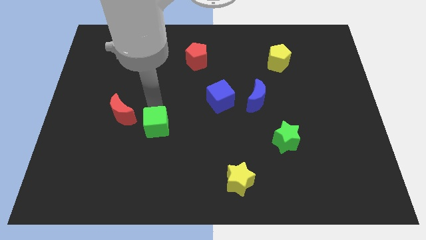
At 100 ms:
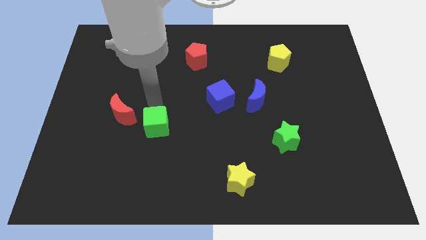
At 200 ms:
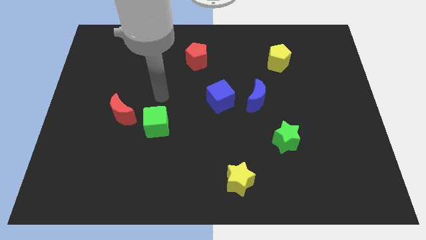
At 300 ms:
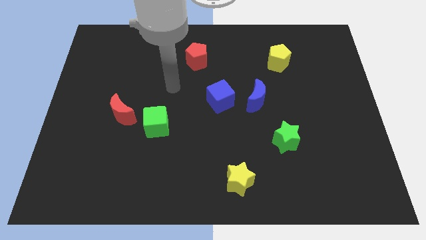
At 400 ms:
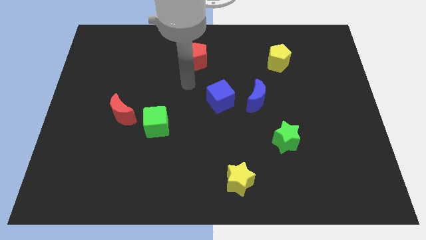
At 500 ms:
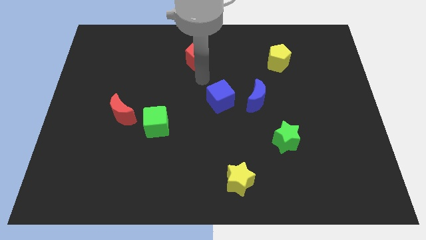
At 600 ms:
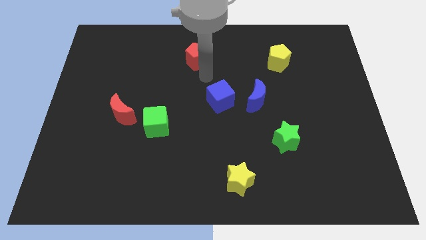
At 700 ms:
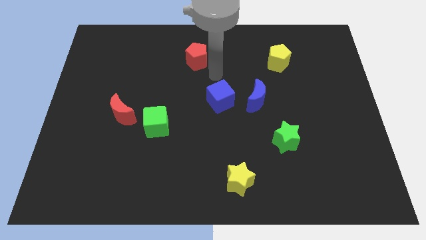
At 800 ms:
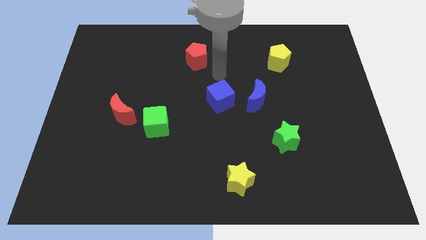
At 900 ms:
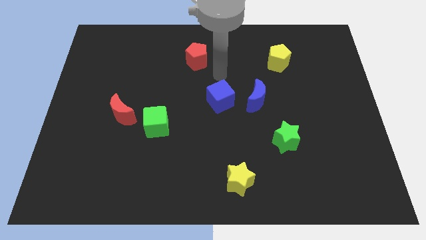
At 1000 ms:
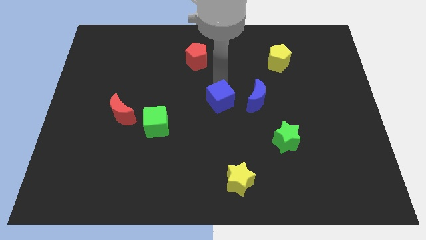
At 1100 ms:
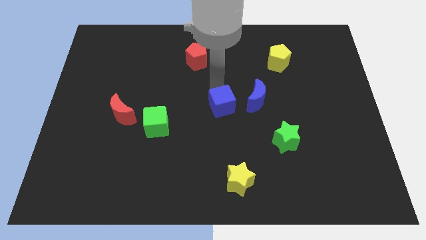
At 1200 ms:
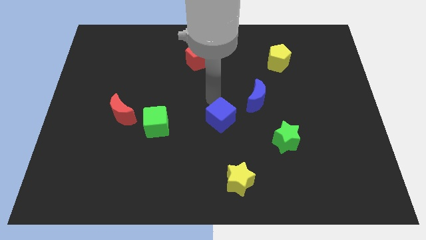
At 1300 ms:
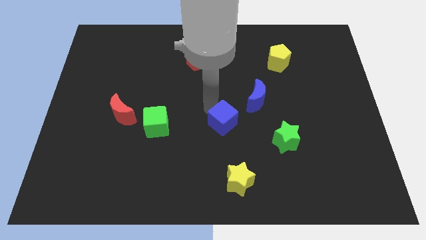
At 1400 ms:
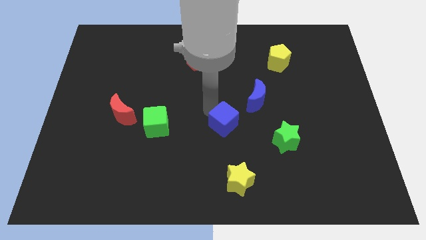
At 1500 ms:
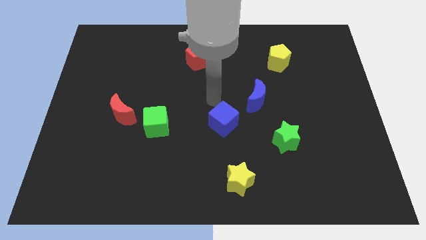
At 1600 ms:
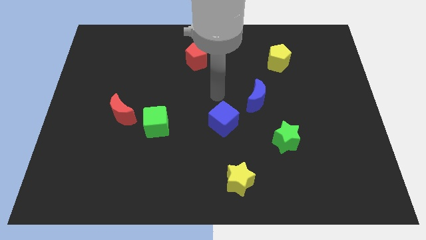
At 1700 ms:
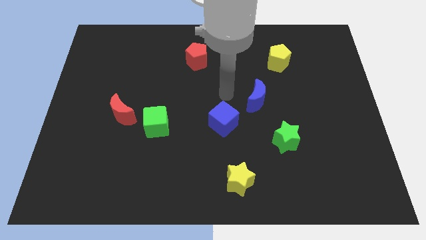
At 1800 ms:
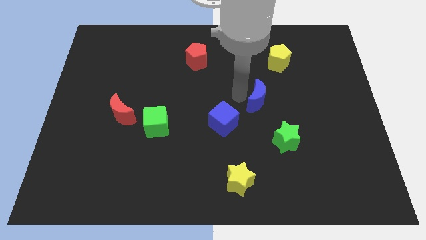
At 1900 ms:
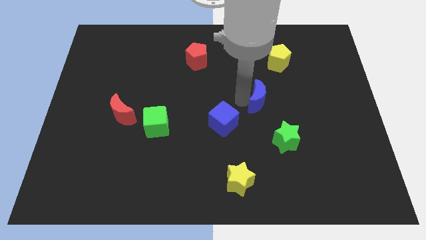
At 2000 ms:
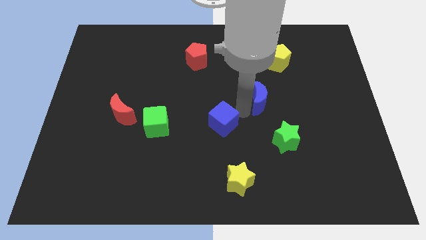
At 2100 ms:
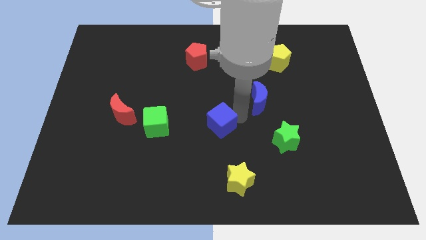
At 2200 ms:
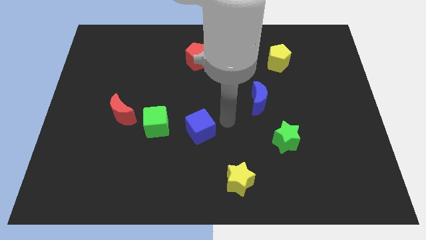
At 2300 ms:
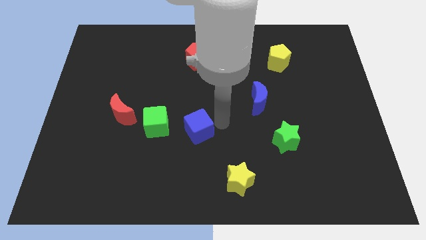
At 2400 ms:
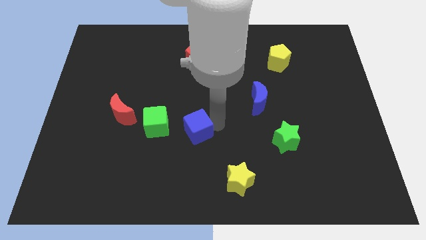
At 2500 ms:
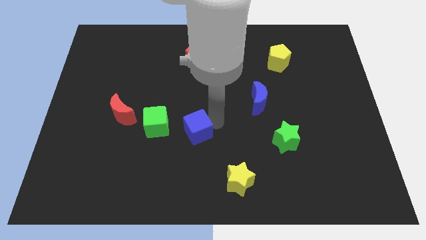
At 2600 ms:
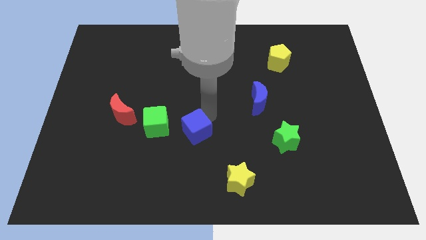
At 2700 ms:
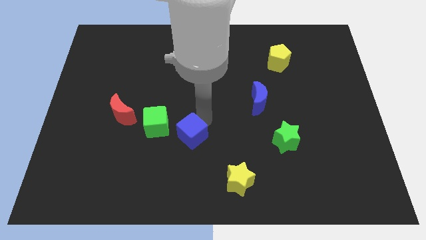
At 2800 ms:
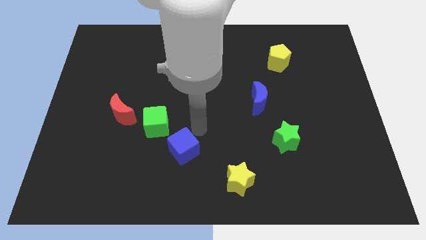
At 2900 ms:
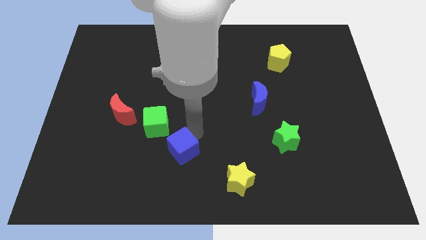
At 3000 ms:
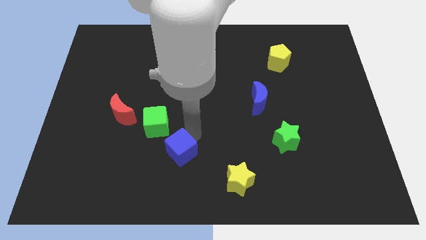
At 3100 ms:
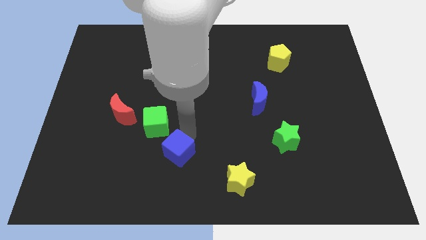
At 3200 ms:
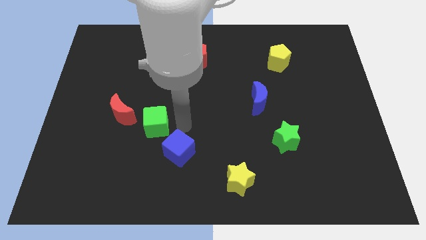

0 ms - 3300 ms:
bring the blue cube at the bottom right side of the green cube

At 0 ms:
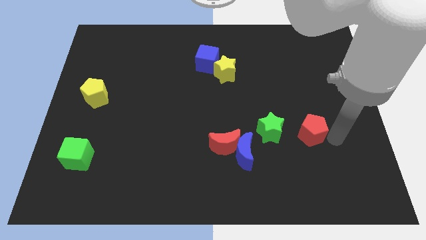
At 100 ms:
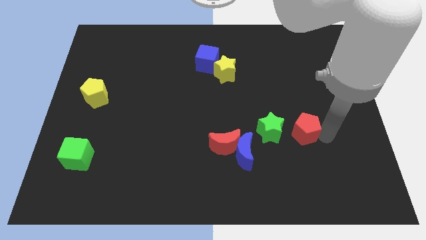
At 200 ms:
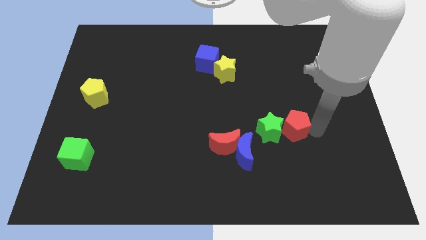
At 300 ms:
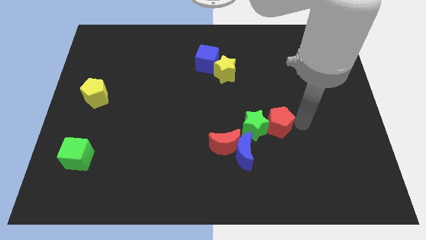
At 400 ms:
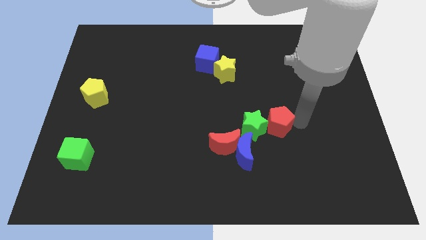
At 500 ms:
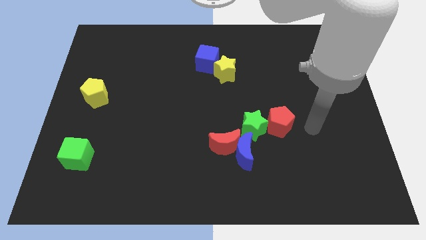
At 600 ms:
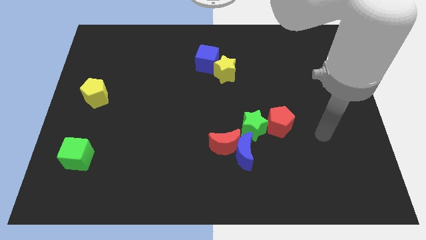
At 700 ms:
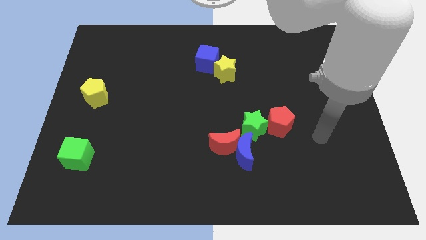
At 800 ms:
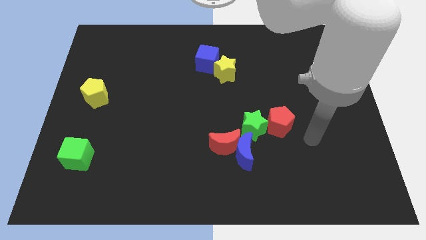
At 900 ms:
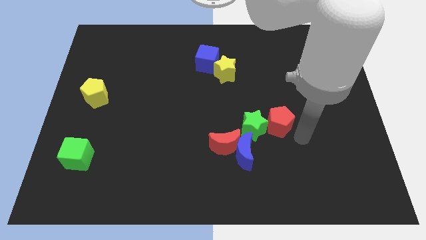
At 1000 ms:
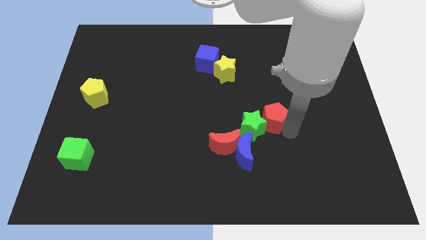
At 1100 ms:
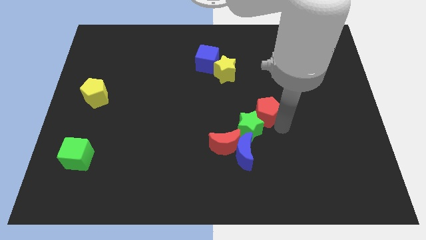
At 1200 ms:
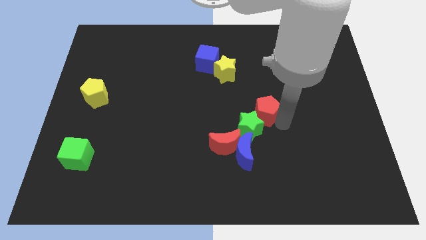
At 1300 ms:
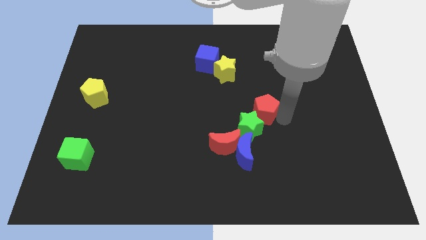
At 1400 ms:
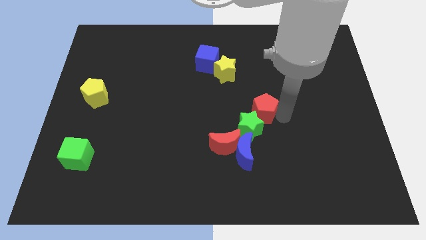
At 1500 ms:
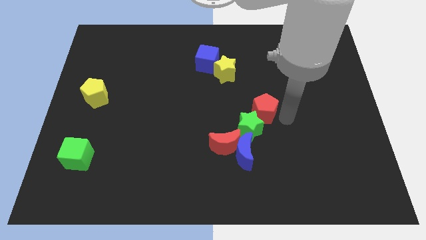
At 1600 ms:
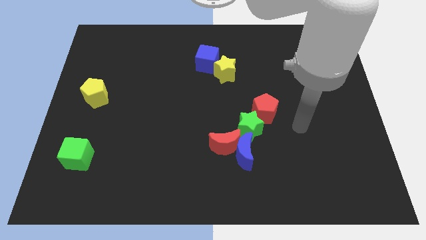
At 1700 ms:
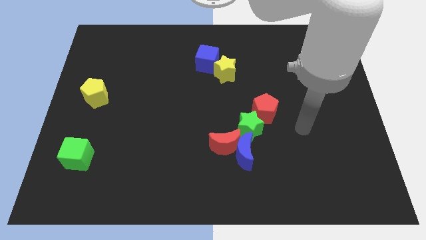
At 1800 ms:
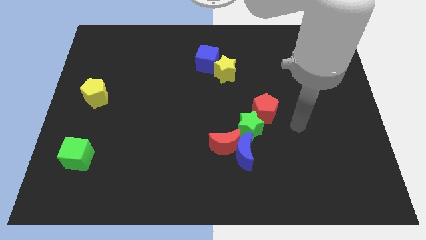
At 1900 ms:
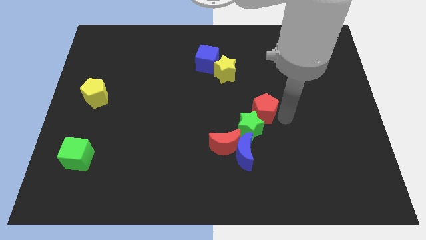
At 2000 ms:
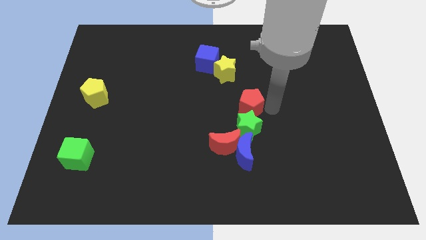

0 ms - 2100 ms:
place red pentagon on top of gren star

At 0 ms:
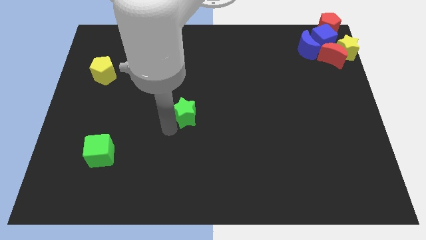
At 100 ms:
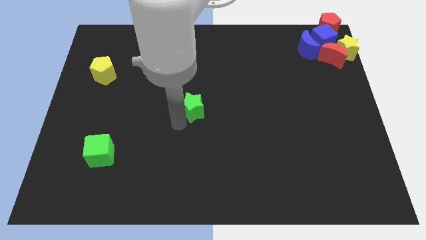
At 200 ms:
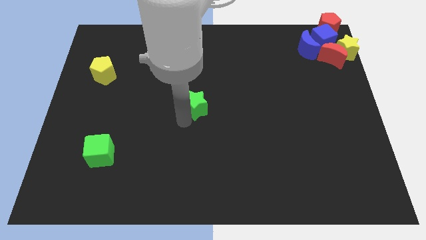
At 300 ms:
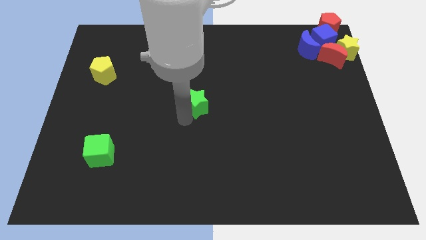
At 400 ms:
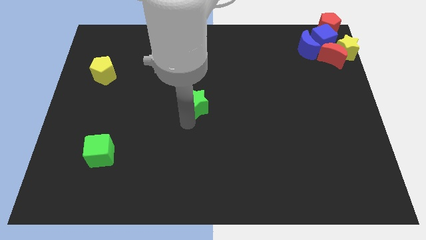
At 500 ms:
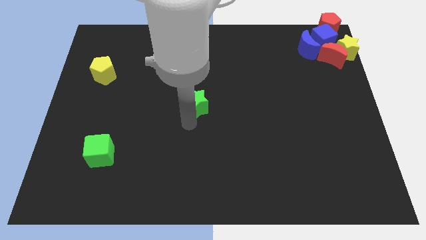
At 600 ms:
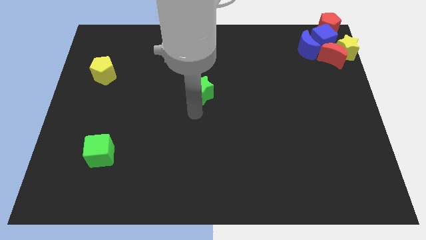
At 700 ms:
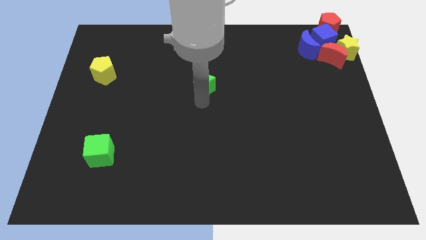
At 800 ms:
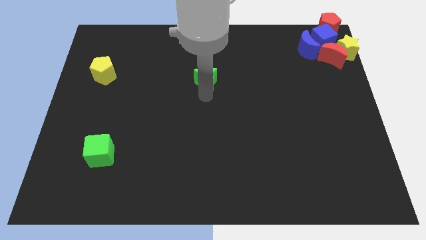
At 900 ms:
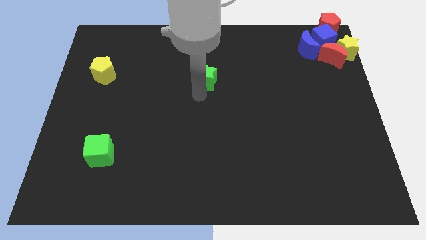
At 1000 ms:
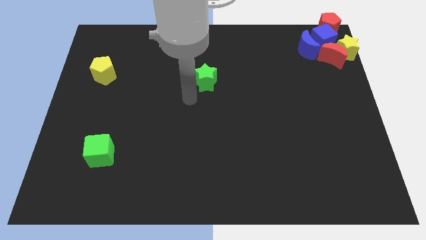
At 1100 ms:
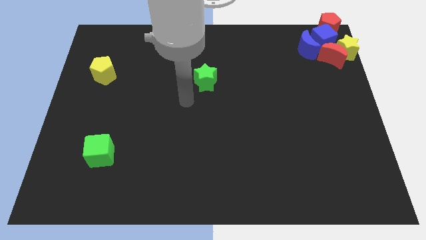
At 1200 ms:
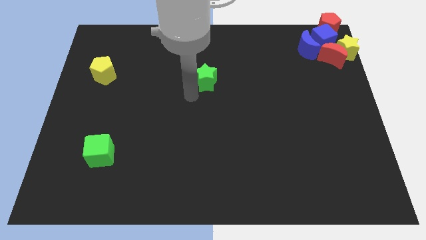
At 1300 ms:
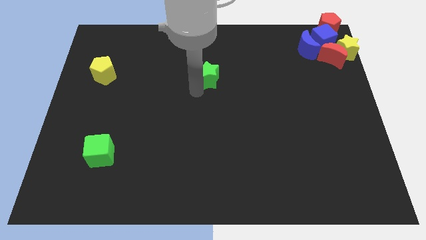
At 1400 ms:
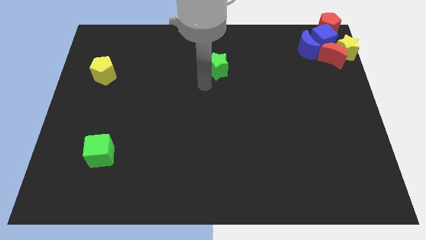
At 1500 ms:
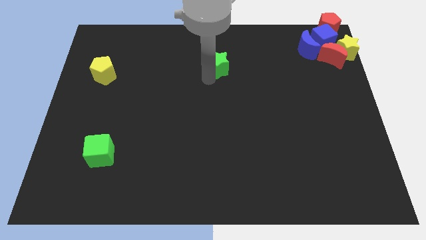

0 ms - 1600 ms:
move the green star to the right of the yellow pentagon

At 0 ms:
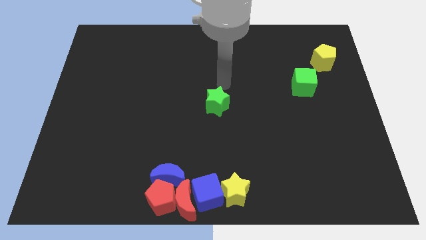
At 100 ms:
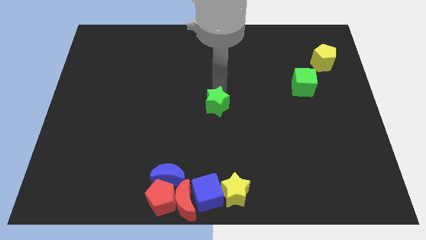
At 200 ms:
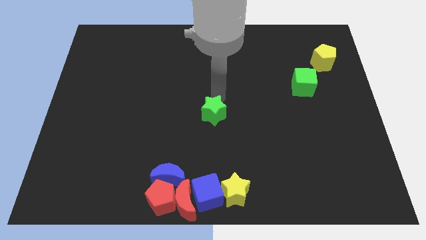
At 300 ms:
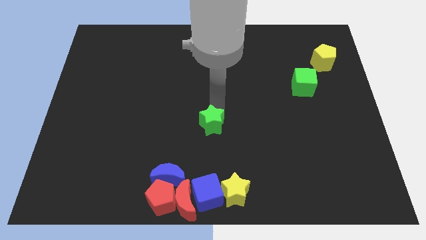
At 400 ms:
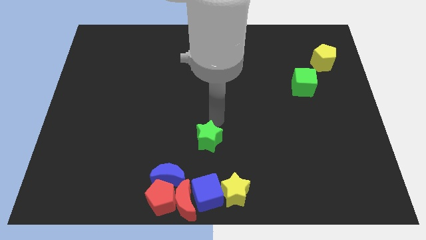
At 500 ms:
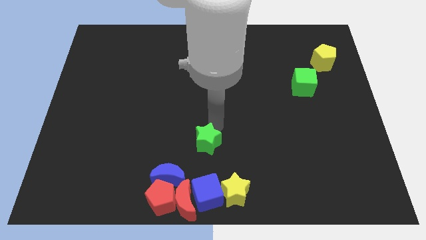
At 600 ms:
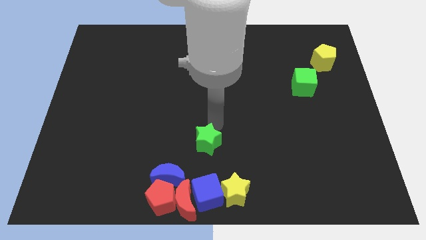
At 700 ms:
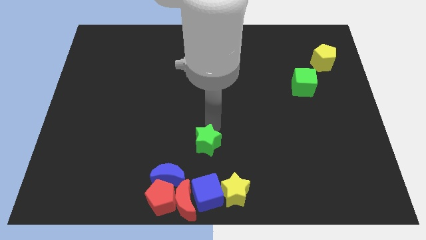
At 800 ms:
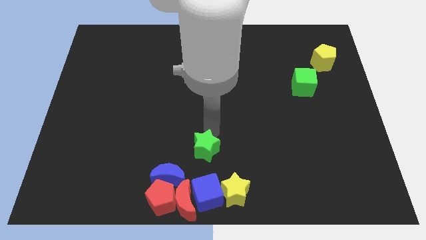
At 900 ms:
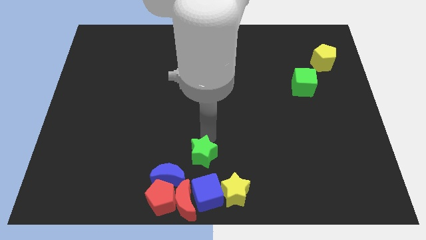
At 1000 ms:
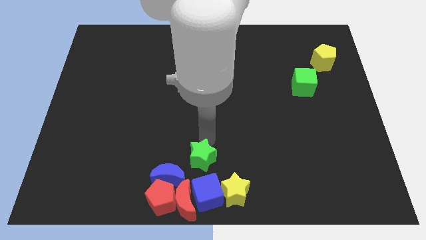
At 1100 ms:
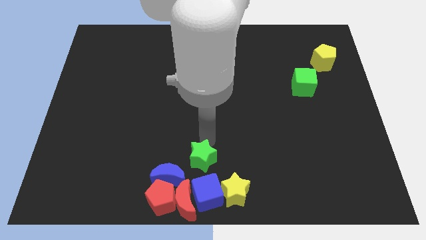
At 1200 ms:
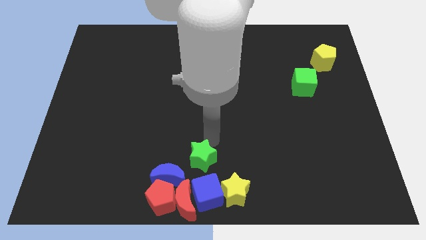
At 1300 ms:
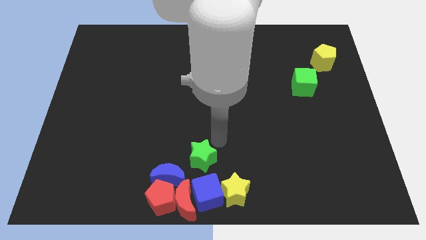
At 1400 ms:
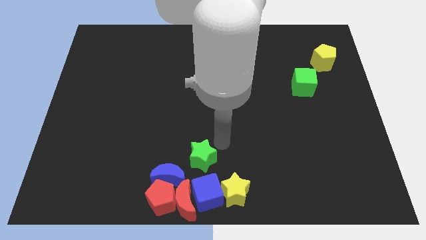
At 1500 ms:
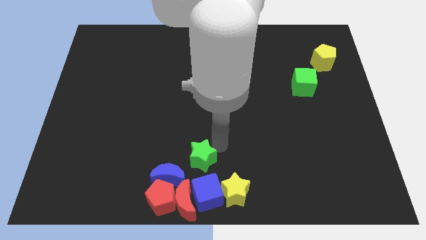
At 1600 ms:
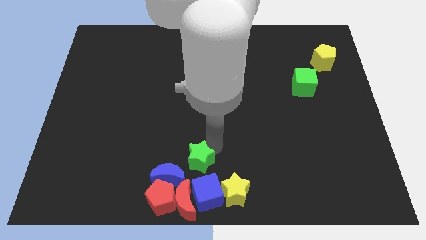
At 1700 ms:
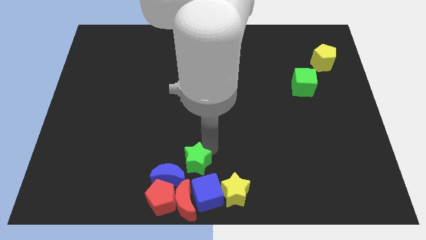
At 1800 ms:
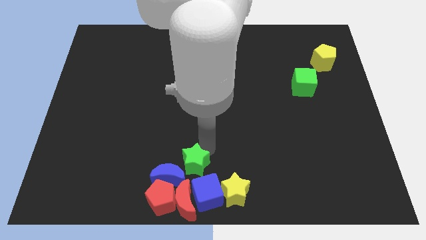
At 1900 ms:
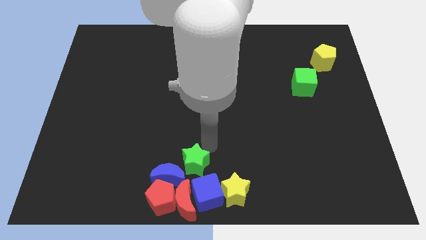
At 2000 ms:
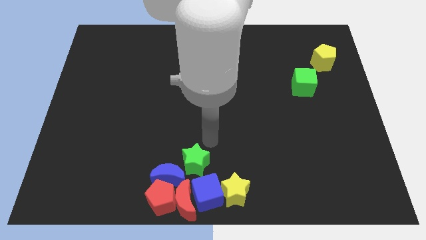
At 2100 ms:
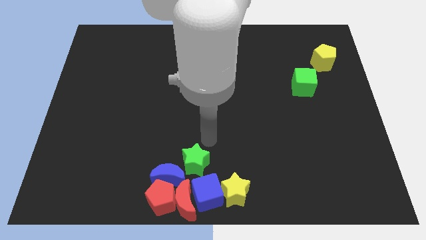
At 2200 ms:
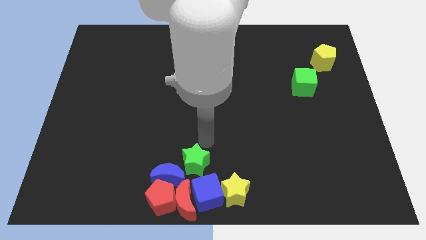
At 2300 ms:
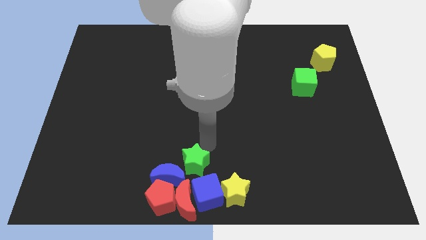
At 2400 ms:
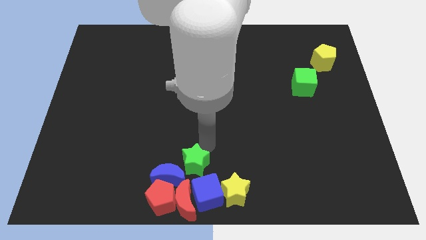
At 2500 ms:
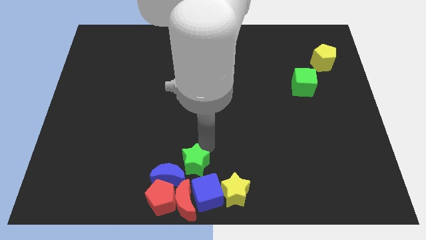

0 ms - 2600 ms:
place the green star at the top of the blue cube
